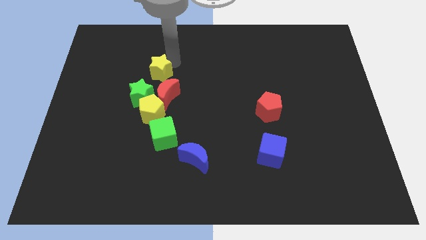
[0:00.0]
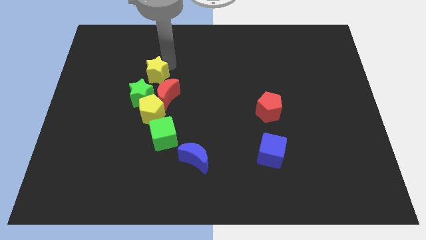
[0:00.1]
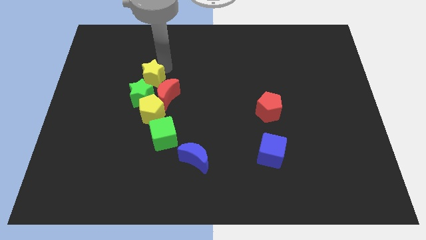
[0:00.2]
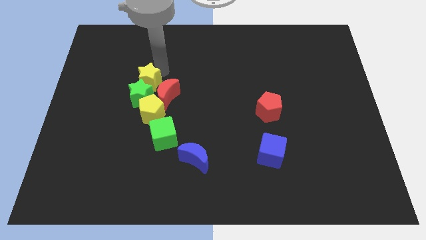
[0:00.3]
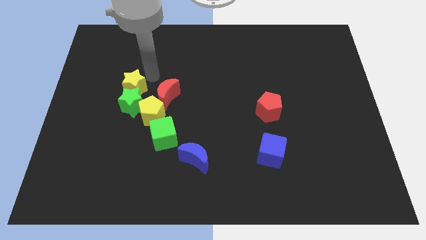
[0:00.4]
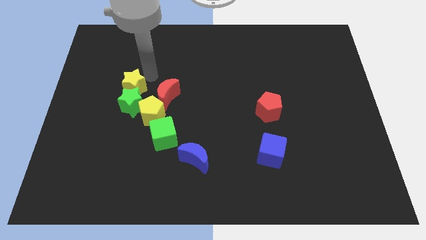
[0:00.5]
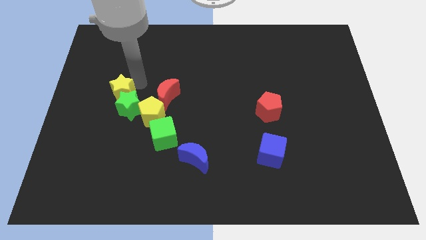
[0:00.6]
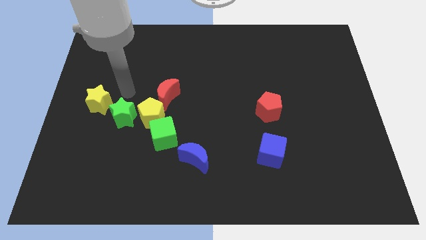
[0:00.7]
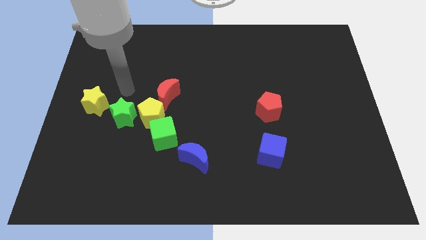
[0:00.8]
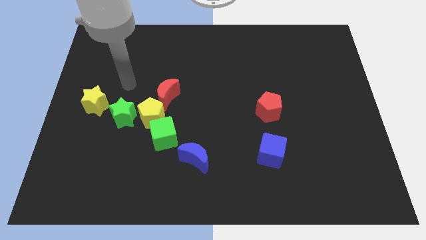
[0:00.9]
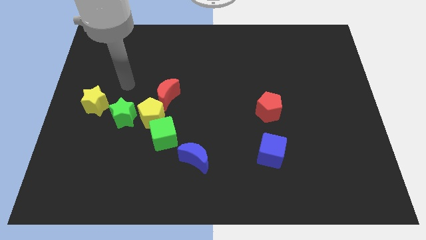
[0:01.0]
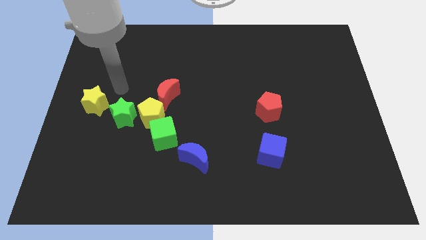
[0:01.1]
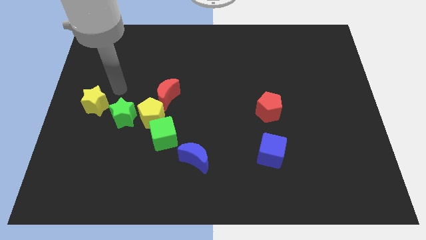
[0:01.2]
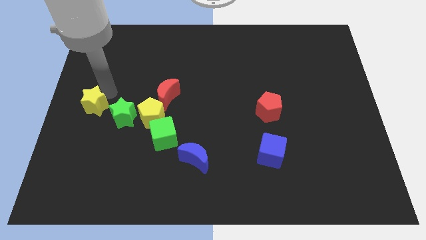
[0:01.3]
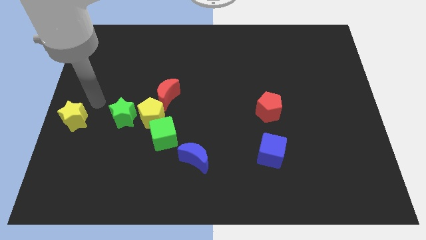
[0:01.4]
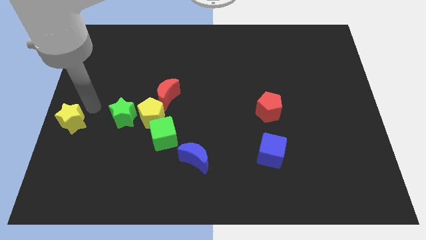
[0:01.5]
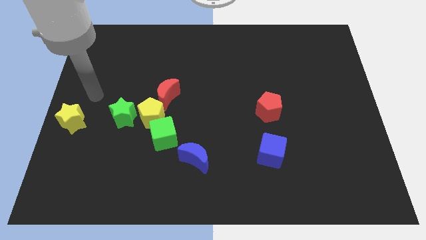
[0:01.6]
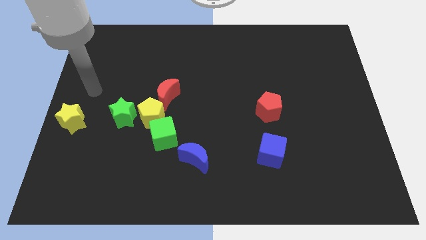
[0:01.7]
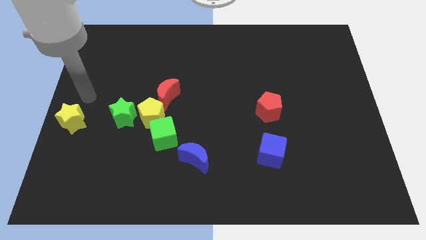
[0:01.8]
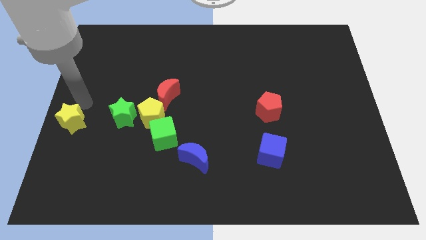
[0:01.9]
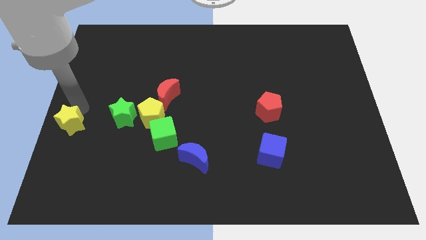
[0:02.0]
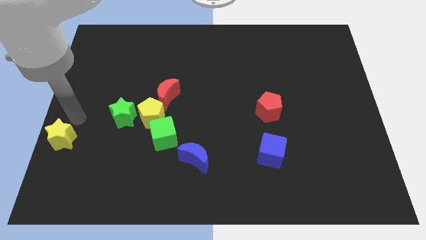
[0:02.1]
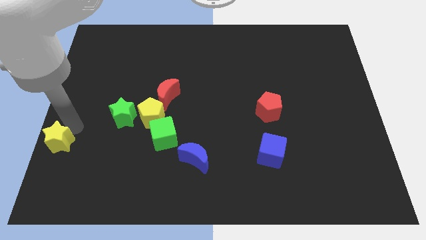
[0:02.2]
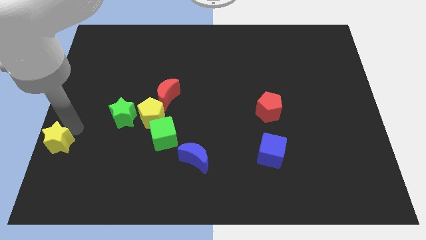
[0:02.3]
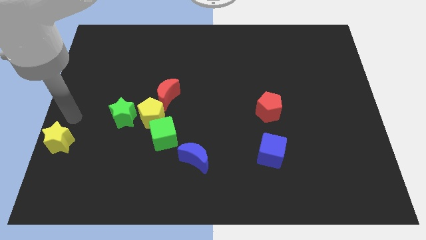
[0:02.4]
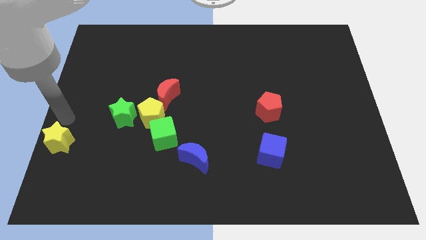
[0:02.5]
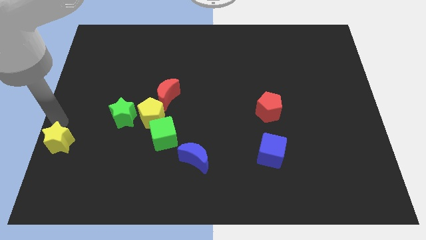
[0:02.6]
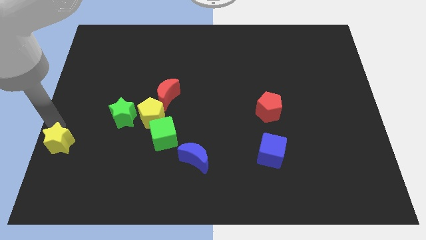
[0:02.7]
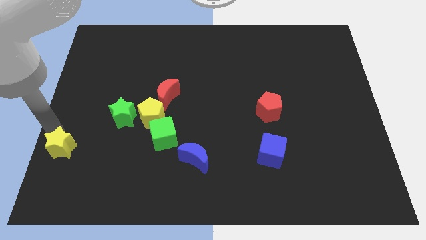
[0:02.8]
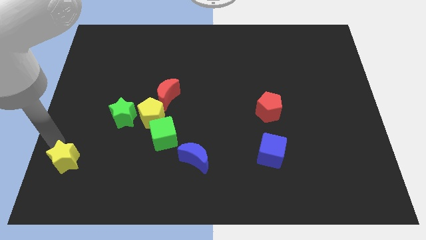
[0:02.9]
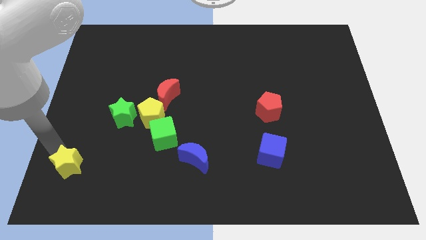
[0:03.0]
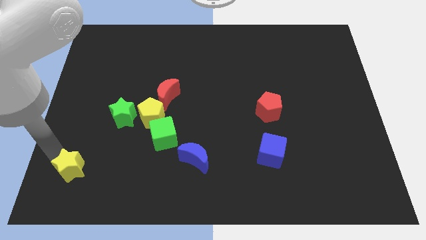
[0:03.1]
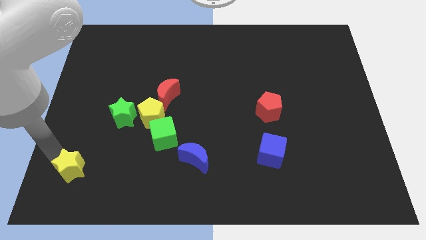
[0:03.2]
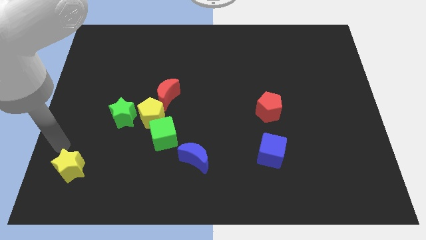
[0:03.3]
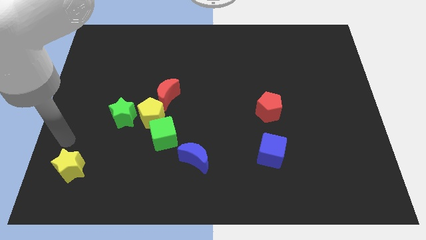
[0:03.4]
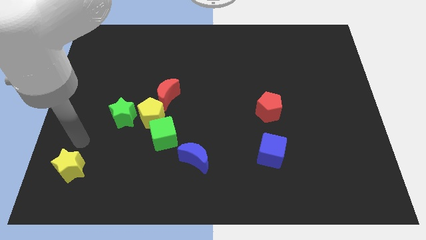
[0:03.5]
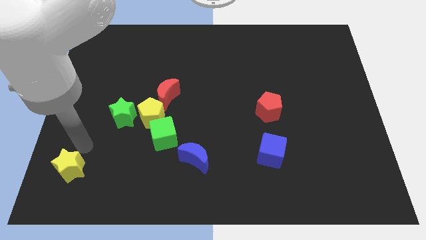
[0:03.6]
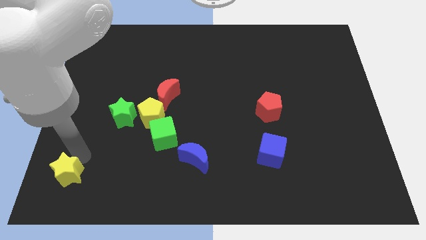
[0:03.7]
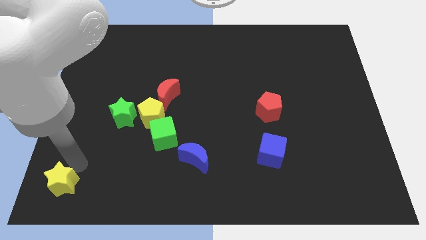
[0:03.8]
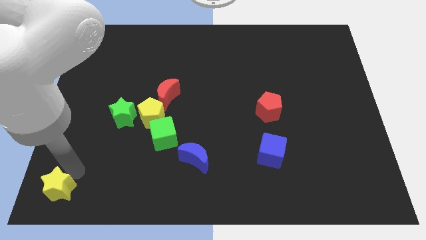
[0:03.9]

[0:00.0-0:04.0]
move yellow star towards bottom left

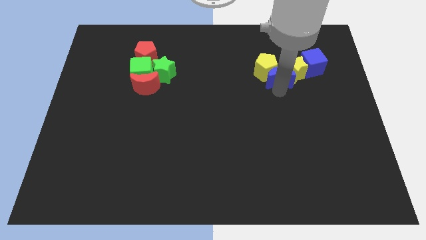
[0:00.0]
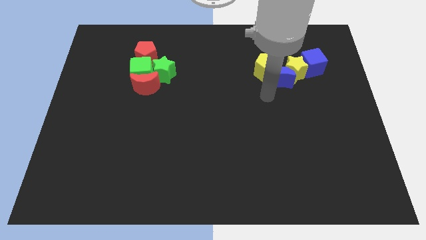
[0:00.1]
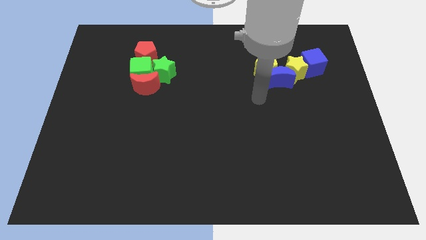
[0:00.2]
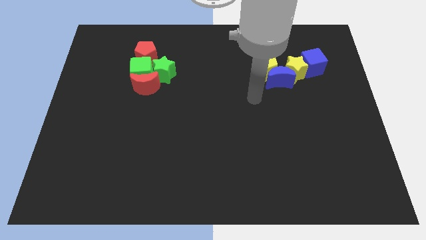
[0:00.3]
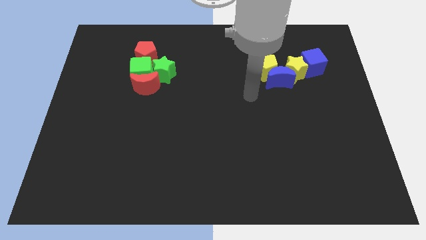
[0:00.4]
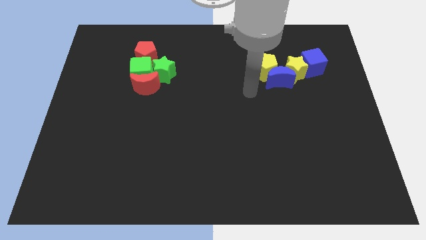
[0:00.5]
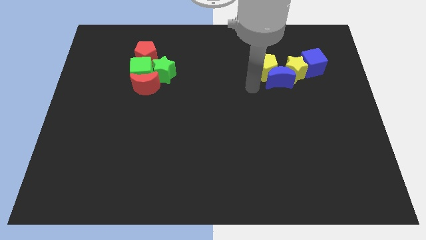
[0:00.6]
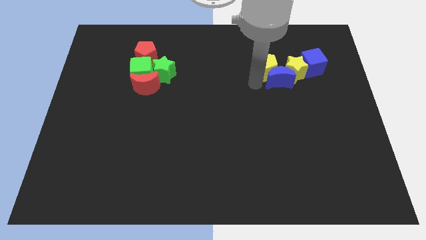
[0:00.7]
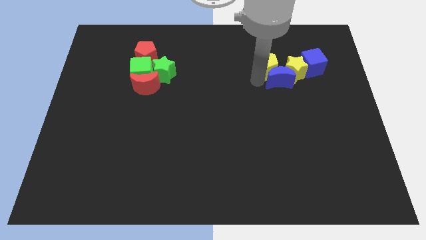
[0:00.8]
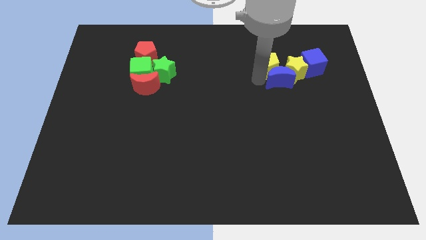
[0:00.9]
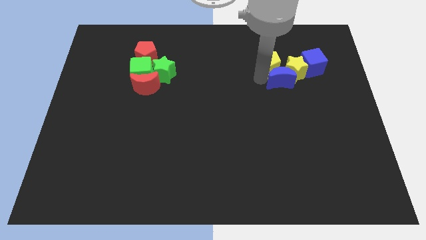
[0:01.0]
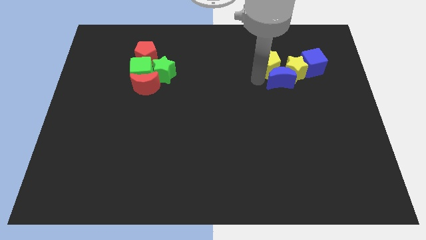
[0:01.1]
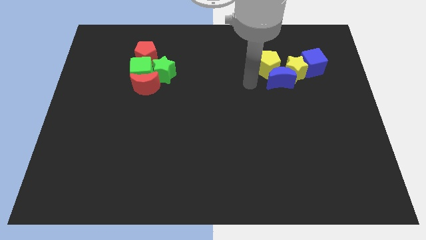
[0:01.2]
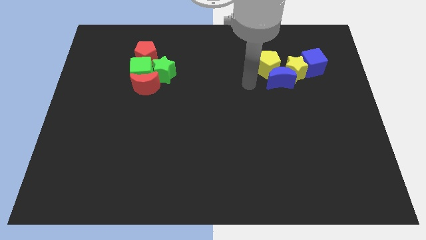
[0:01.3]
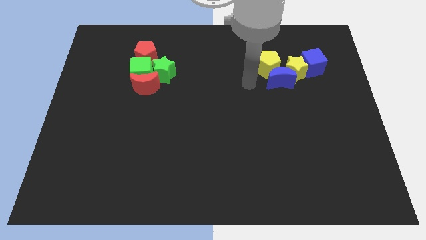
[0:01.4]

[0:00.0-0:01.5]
slightly push the yellow pentagon to the right

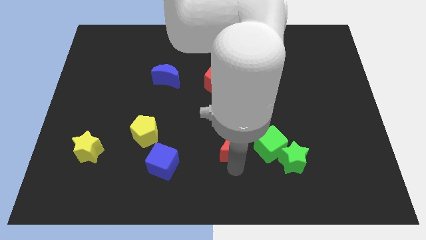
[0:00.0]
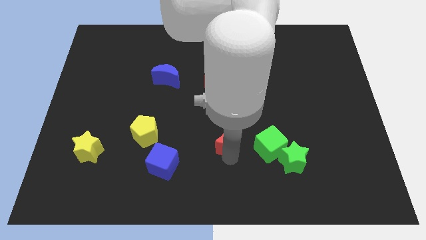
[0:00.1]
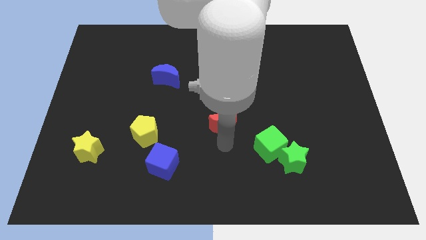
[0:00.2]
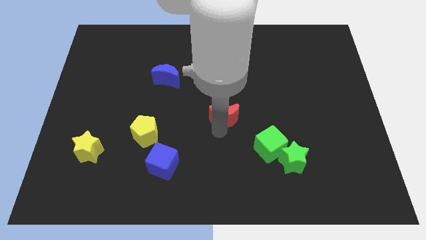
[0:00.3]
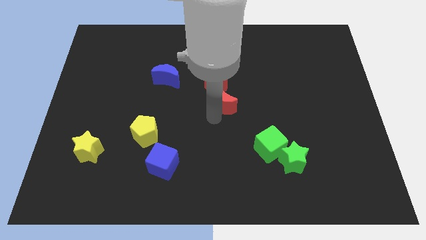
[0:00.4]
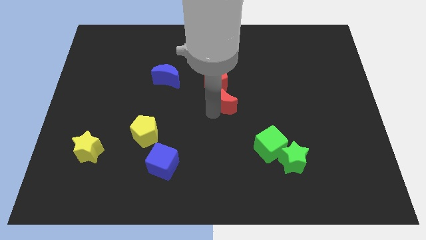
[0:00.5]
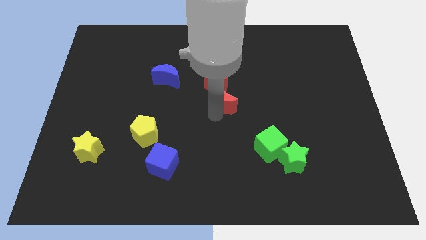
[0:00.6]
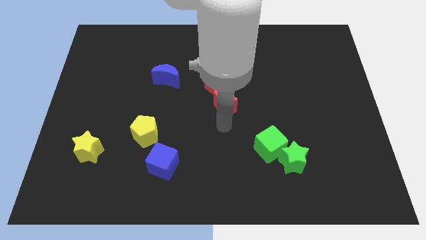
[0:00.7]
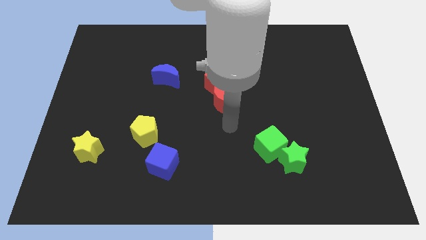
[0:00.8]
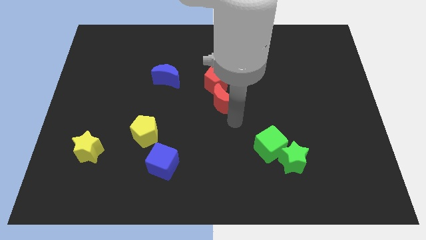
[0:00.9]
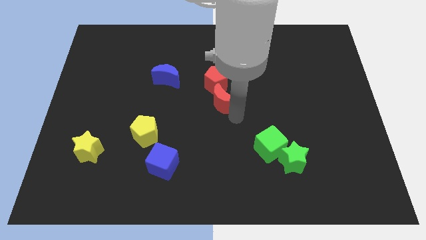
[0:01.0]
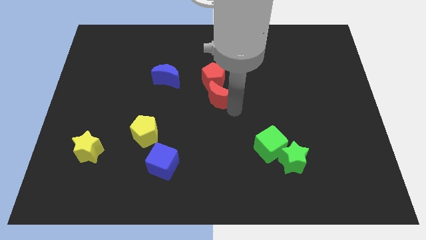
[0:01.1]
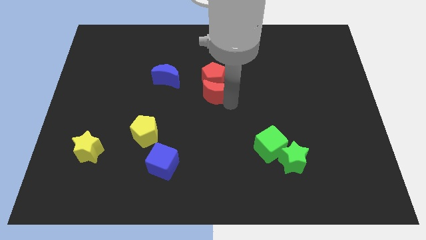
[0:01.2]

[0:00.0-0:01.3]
move the red crescent to the center of the board

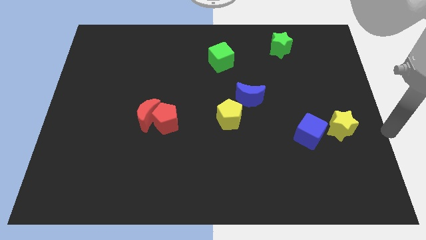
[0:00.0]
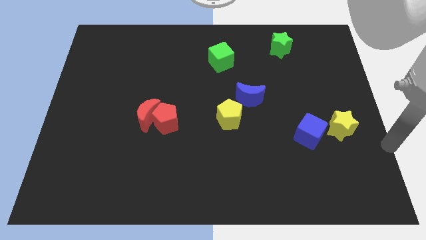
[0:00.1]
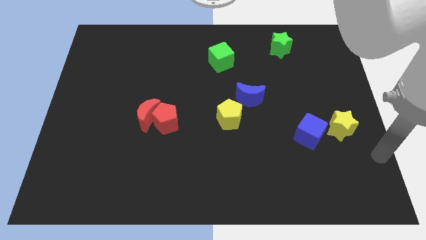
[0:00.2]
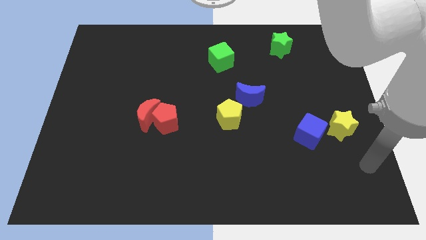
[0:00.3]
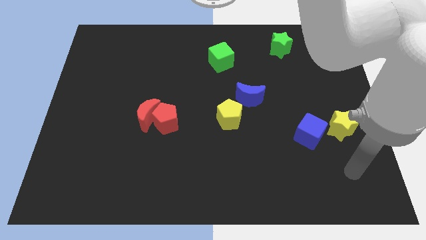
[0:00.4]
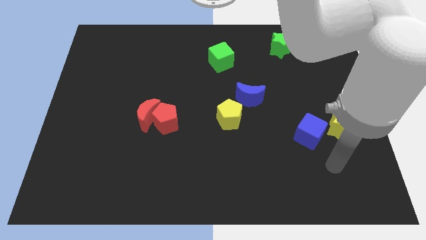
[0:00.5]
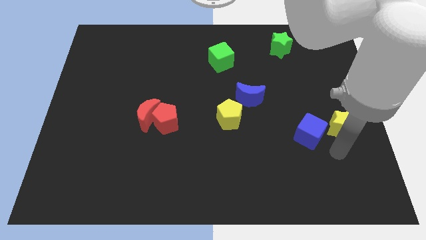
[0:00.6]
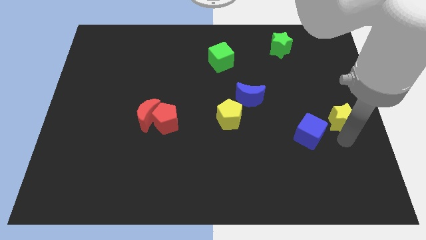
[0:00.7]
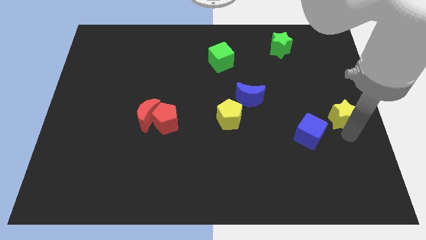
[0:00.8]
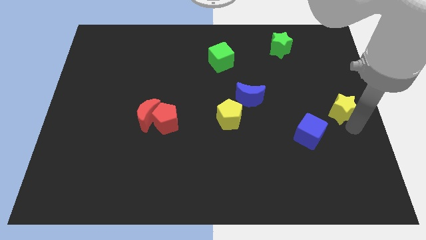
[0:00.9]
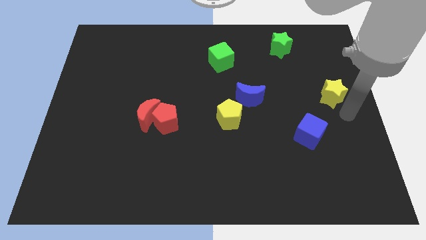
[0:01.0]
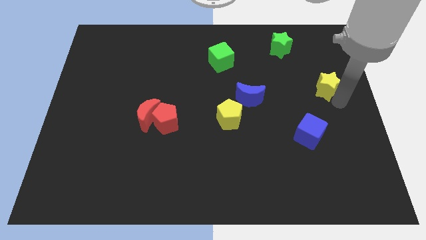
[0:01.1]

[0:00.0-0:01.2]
place the yellow star right to the blue moon

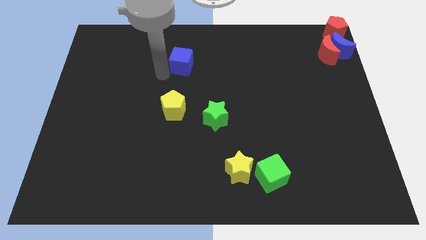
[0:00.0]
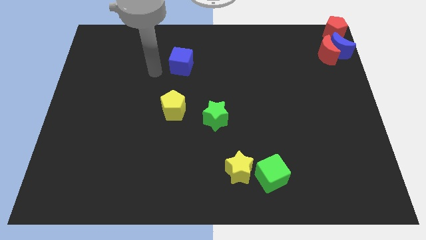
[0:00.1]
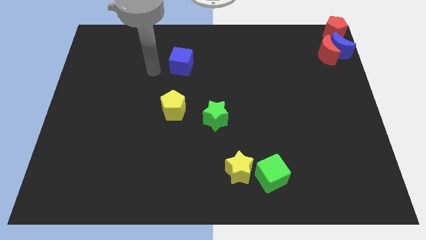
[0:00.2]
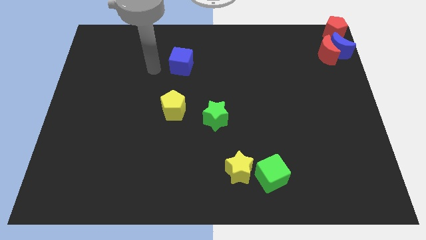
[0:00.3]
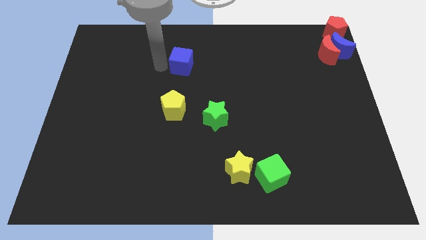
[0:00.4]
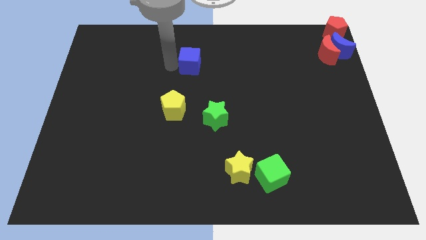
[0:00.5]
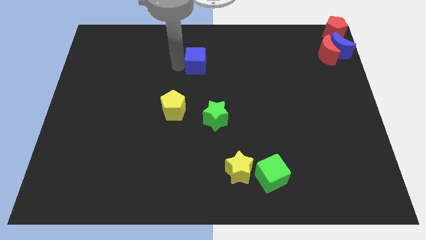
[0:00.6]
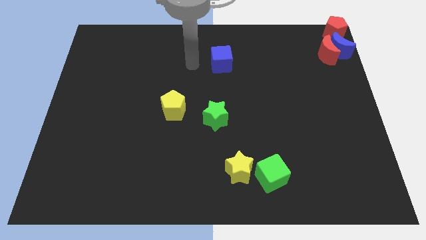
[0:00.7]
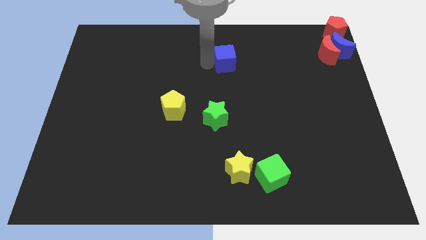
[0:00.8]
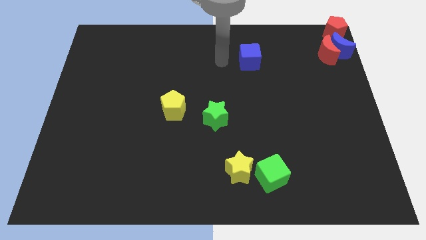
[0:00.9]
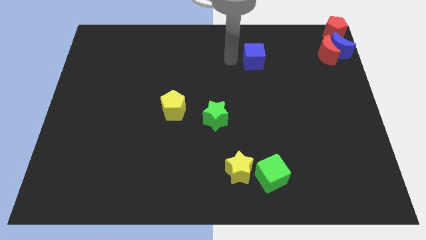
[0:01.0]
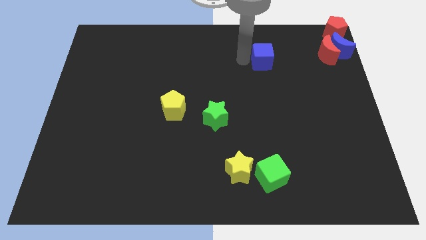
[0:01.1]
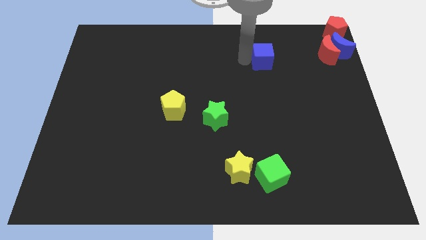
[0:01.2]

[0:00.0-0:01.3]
move the blue cube to the left of the red crescent
